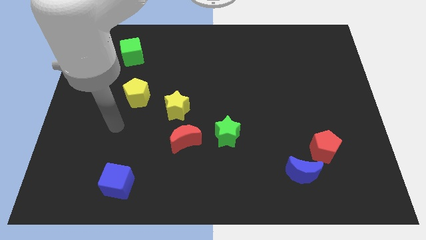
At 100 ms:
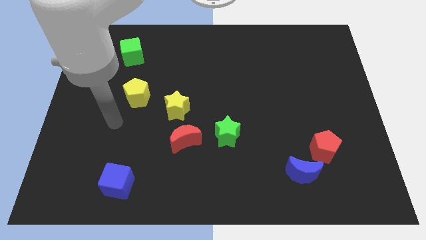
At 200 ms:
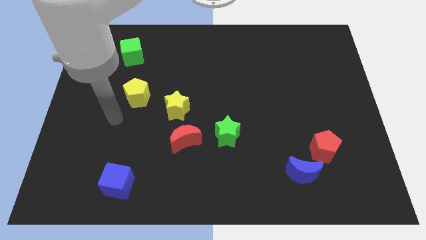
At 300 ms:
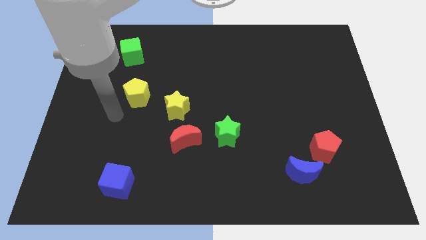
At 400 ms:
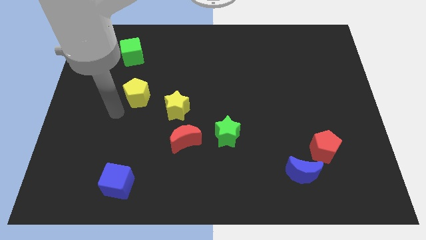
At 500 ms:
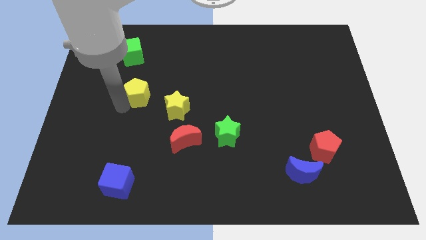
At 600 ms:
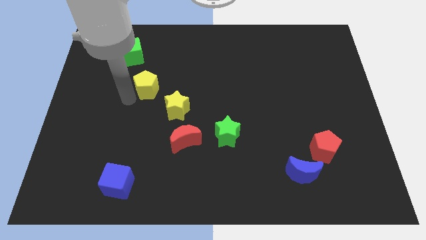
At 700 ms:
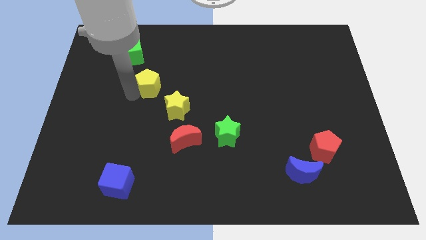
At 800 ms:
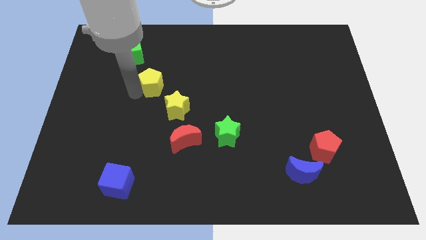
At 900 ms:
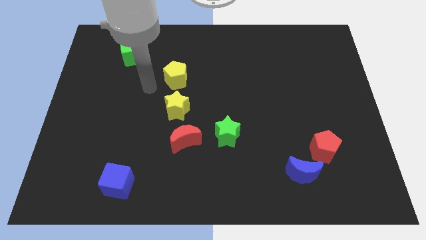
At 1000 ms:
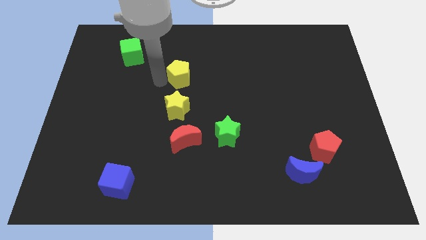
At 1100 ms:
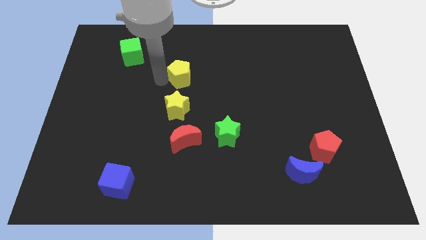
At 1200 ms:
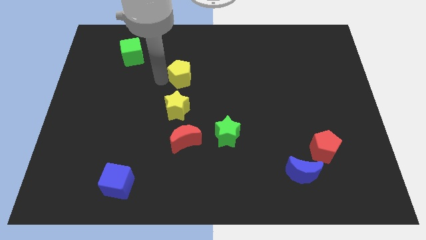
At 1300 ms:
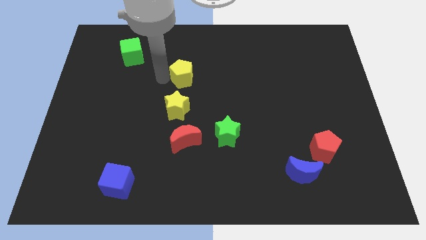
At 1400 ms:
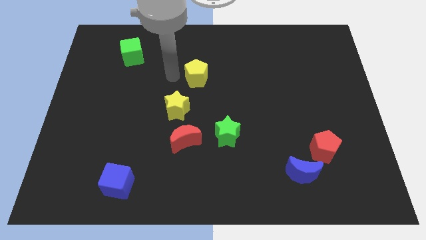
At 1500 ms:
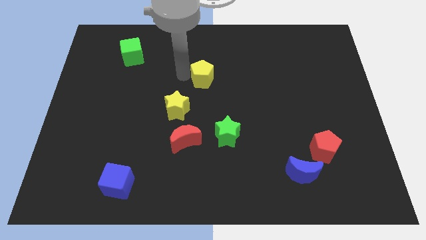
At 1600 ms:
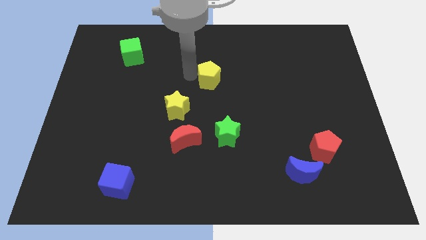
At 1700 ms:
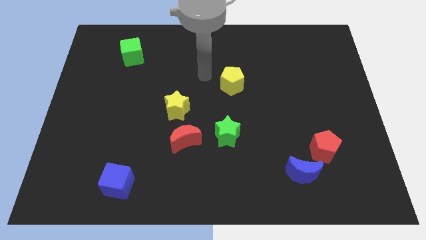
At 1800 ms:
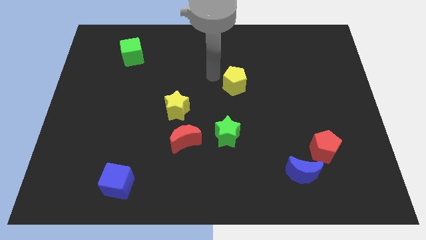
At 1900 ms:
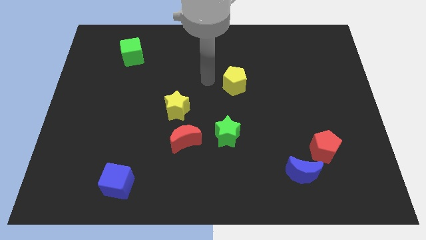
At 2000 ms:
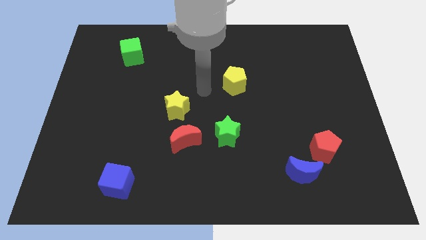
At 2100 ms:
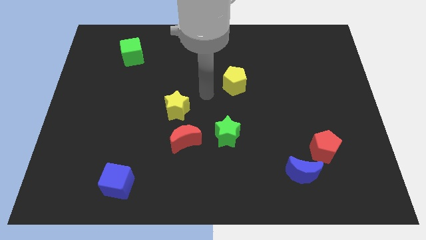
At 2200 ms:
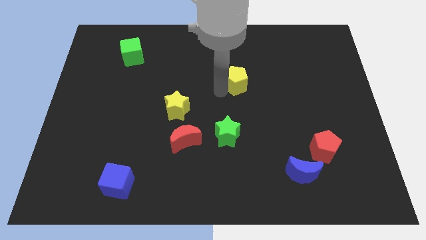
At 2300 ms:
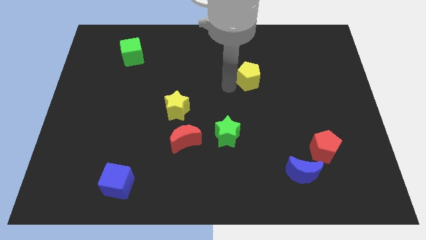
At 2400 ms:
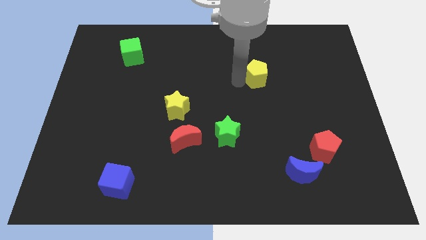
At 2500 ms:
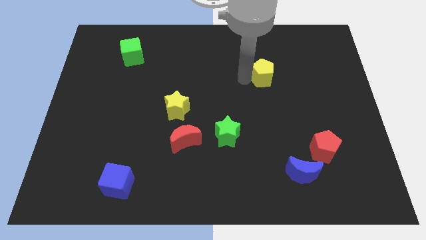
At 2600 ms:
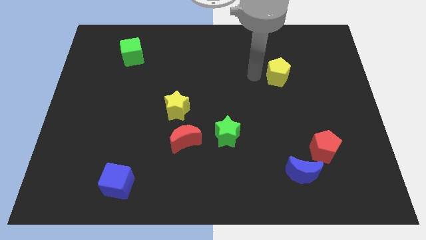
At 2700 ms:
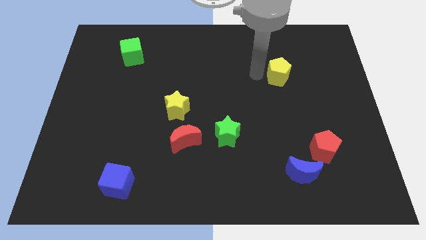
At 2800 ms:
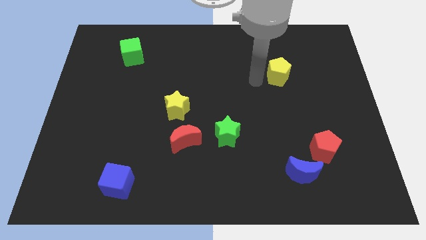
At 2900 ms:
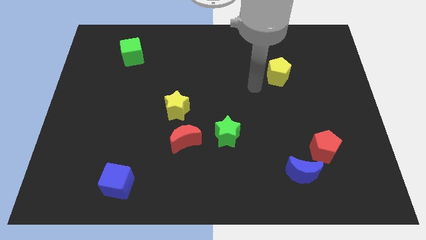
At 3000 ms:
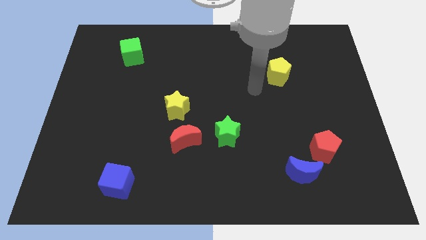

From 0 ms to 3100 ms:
push the yellow pentagon to the top right of the green star

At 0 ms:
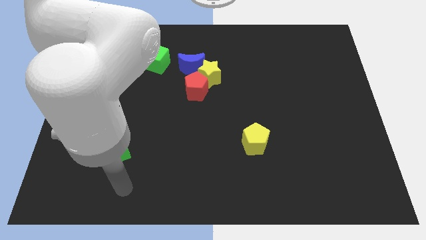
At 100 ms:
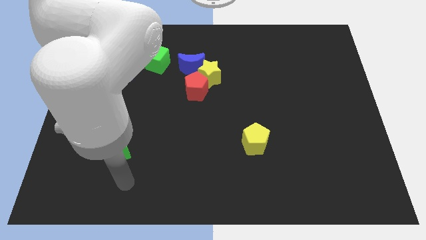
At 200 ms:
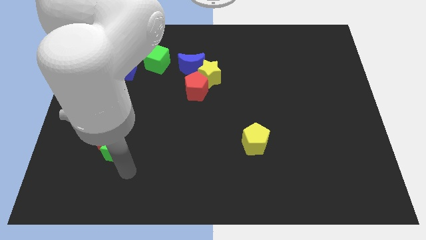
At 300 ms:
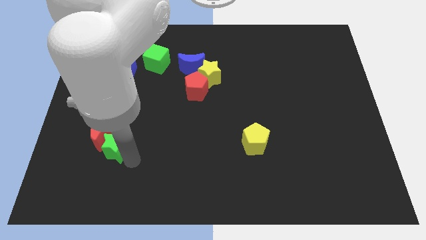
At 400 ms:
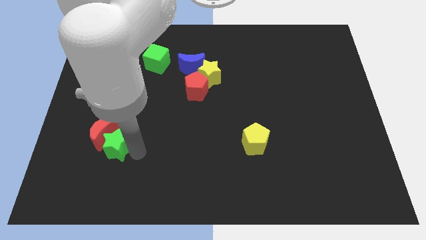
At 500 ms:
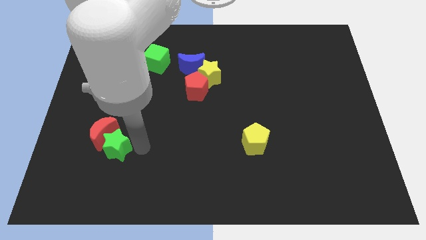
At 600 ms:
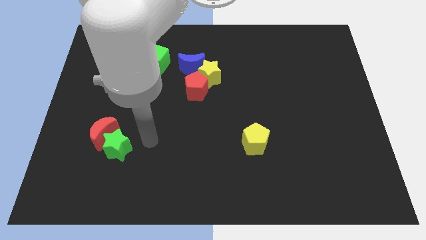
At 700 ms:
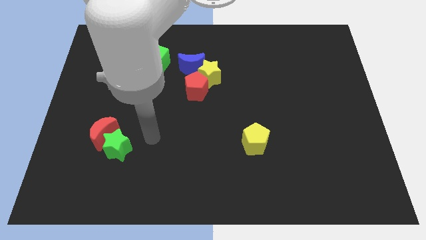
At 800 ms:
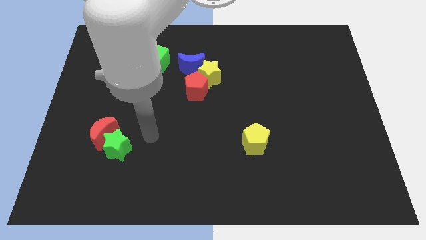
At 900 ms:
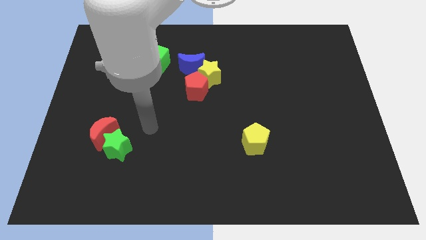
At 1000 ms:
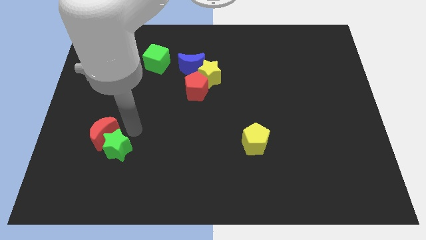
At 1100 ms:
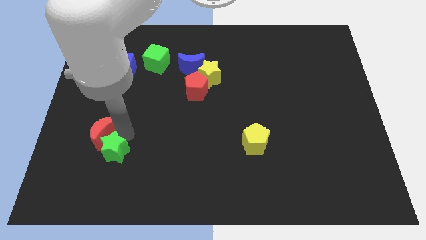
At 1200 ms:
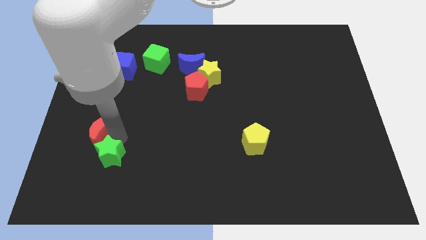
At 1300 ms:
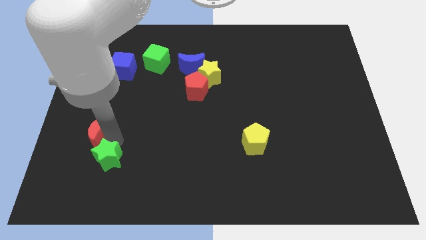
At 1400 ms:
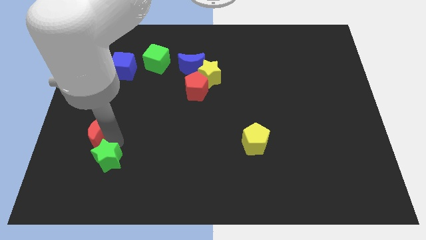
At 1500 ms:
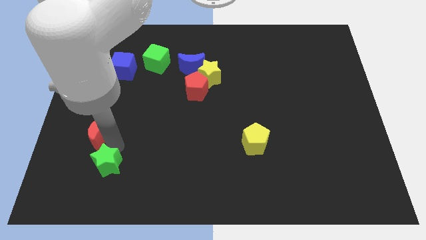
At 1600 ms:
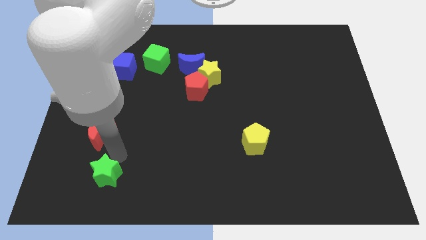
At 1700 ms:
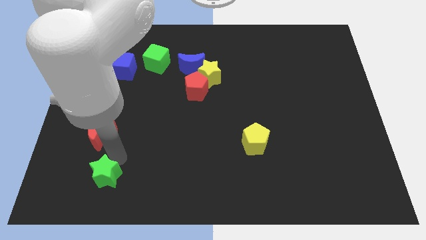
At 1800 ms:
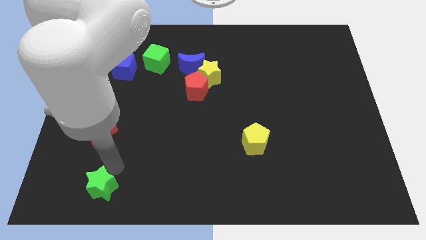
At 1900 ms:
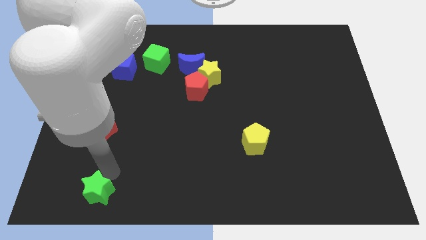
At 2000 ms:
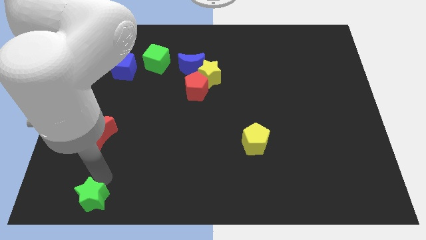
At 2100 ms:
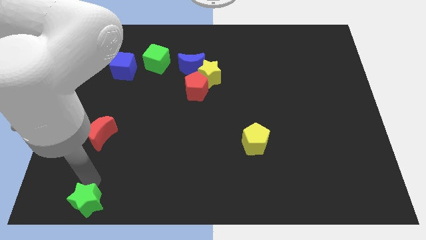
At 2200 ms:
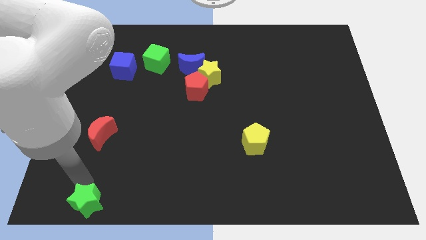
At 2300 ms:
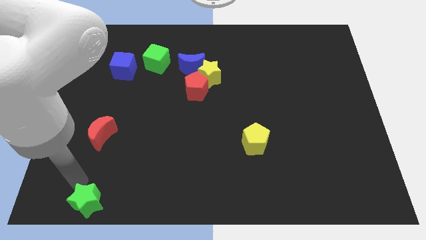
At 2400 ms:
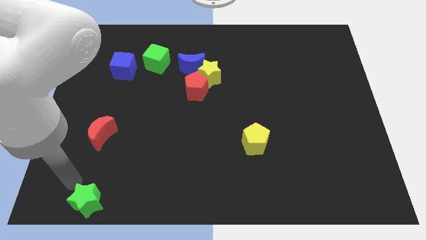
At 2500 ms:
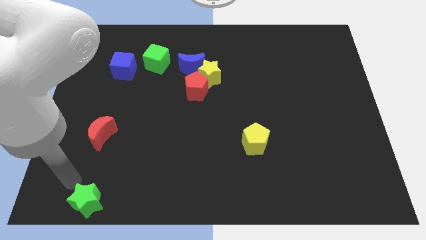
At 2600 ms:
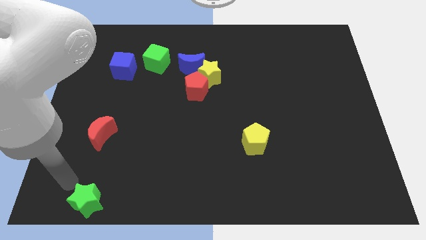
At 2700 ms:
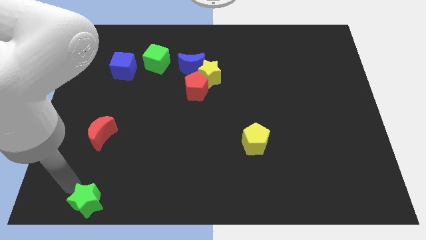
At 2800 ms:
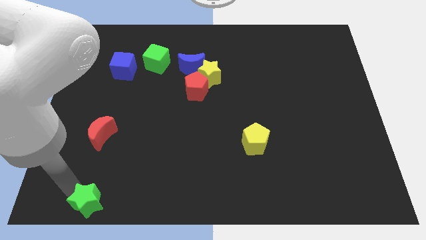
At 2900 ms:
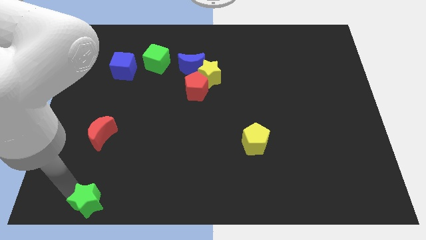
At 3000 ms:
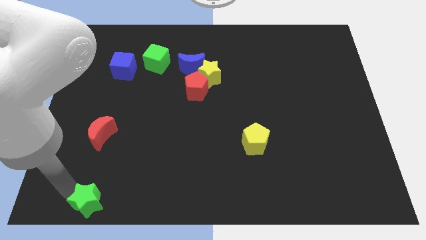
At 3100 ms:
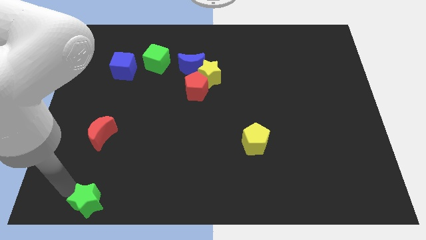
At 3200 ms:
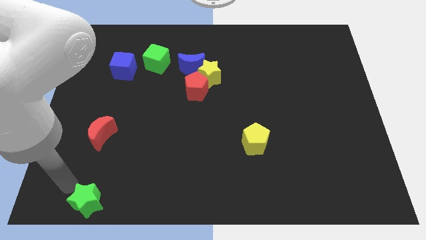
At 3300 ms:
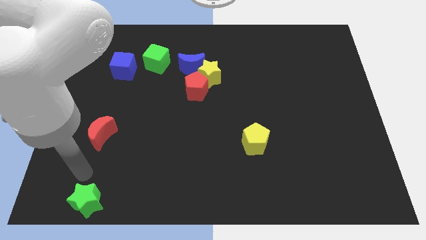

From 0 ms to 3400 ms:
push the green star towards the down of the board

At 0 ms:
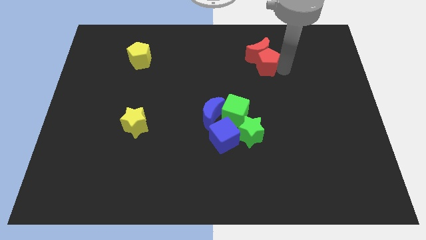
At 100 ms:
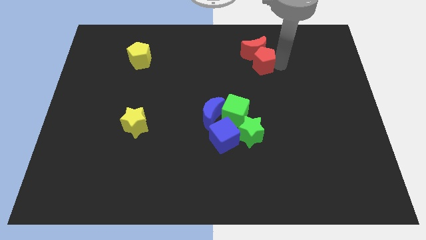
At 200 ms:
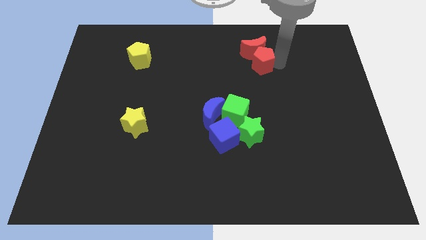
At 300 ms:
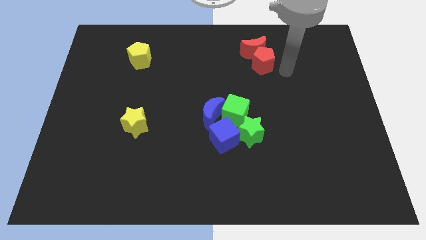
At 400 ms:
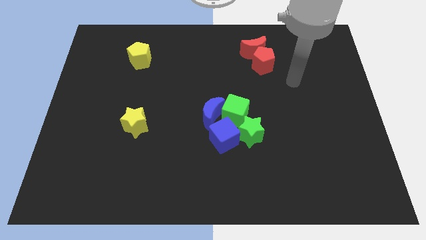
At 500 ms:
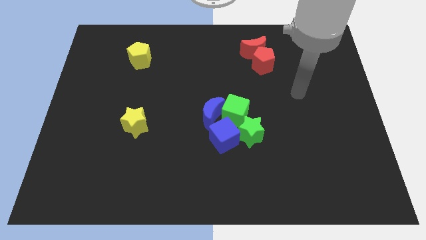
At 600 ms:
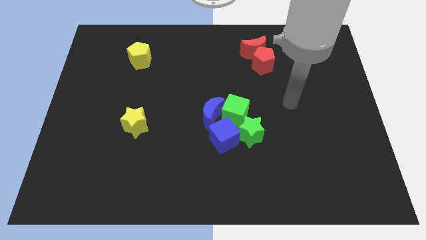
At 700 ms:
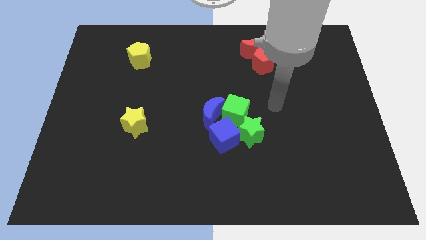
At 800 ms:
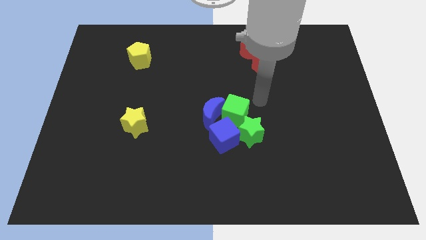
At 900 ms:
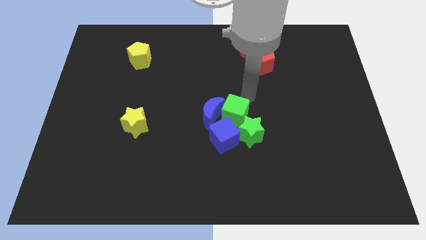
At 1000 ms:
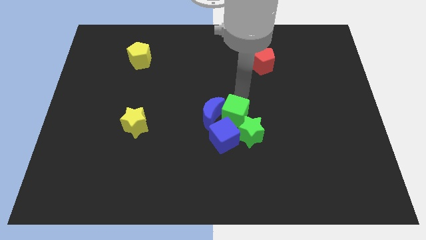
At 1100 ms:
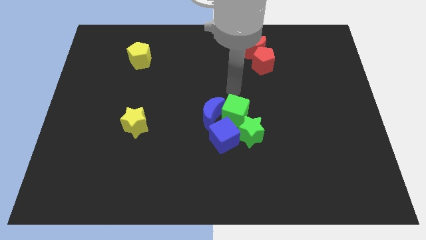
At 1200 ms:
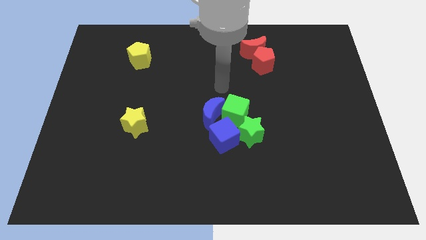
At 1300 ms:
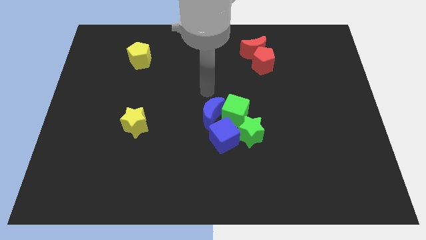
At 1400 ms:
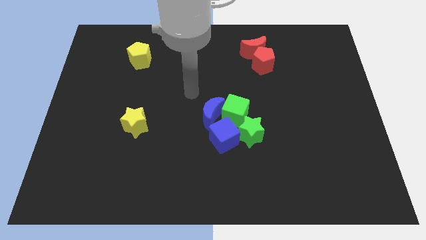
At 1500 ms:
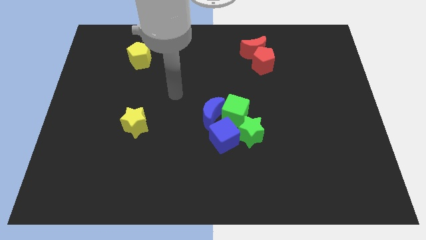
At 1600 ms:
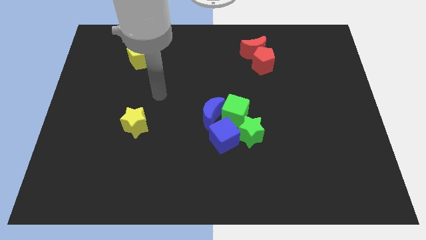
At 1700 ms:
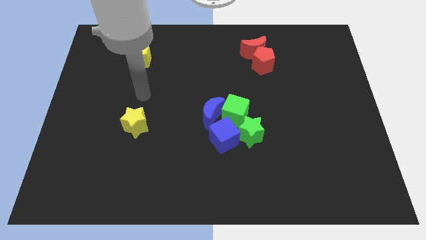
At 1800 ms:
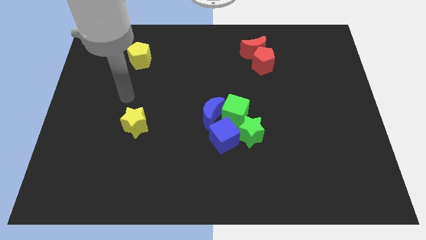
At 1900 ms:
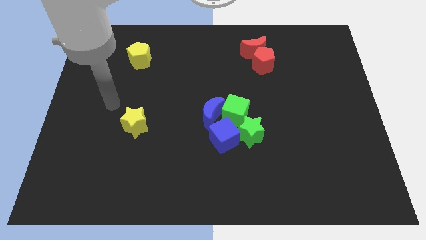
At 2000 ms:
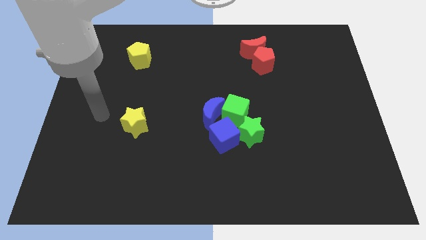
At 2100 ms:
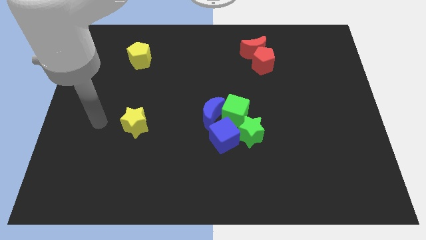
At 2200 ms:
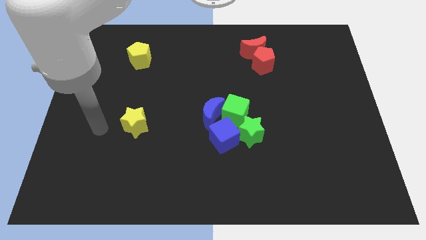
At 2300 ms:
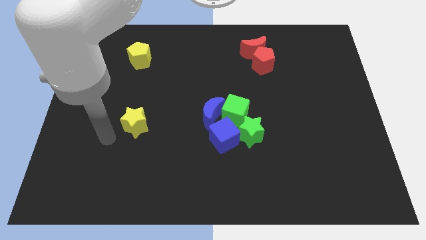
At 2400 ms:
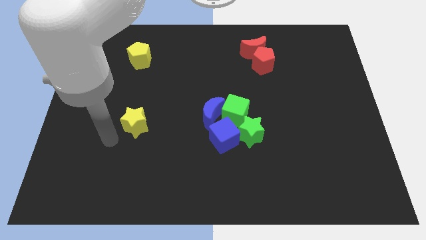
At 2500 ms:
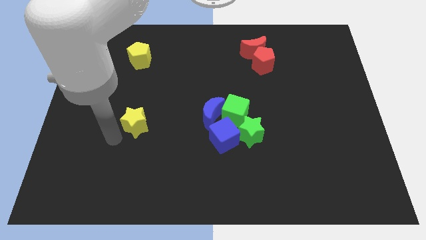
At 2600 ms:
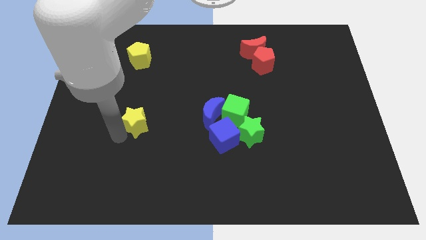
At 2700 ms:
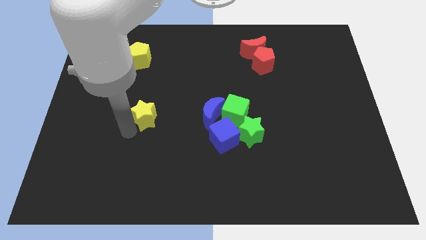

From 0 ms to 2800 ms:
place the arm near the yellow star

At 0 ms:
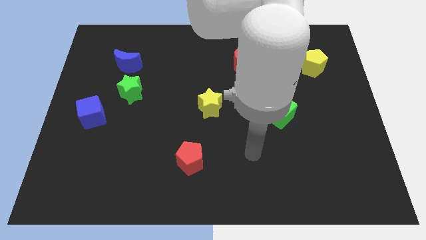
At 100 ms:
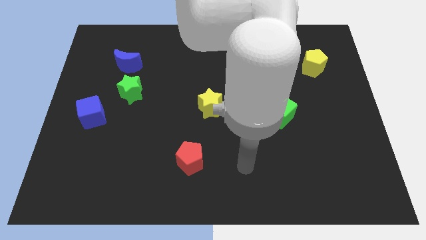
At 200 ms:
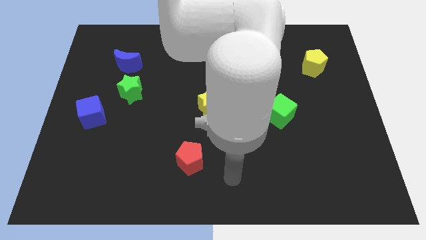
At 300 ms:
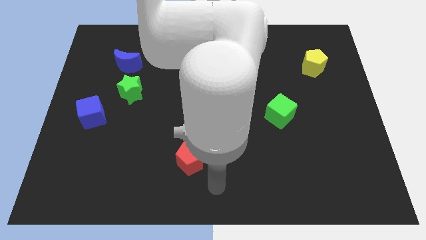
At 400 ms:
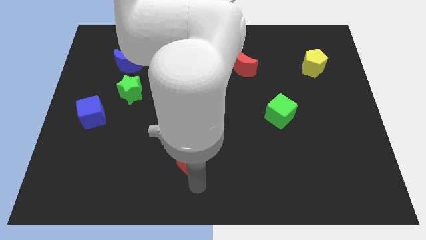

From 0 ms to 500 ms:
move the arm below the red pentagon
